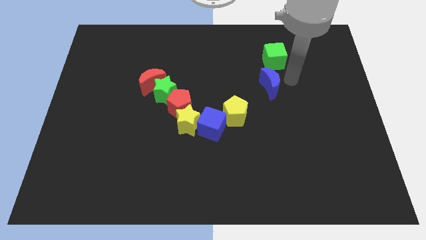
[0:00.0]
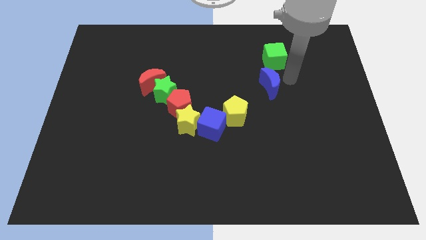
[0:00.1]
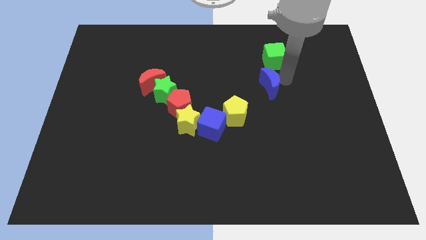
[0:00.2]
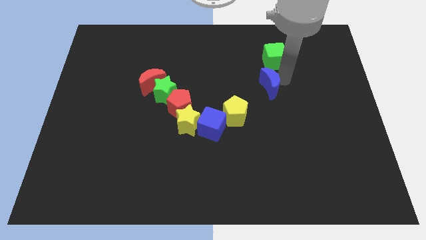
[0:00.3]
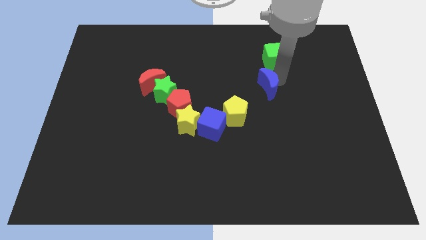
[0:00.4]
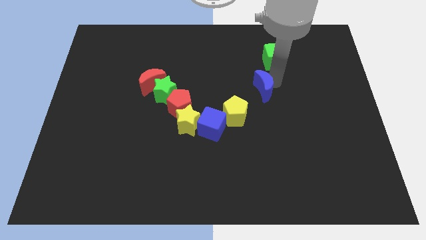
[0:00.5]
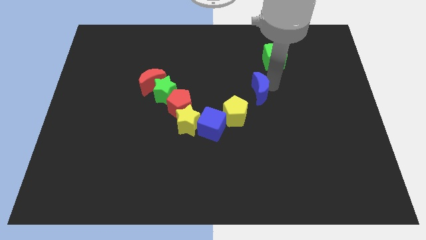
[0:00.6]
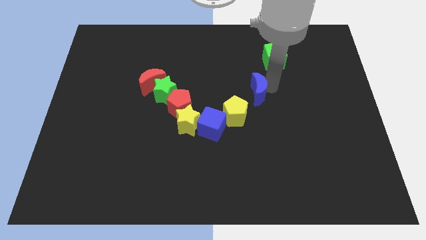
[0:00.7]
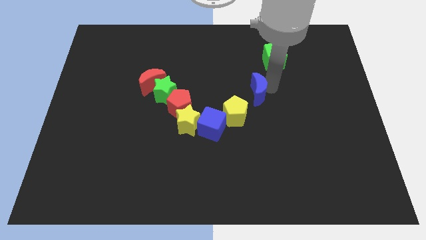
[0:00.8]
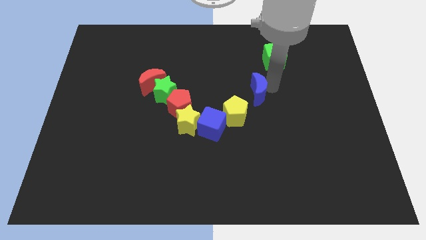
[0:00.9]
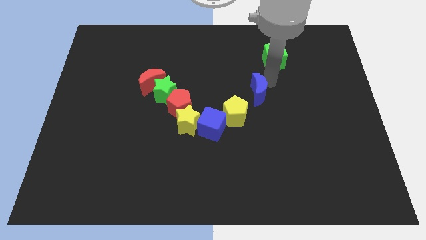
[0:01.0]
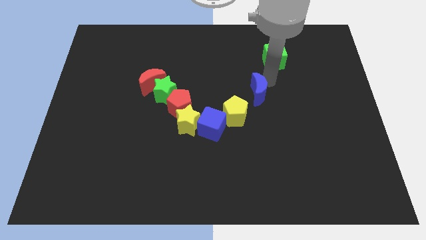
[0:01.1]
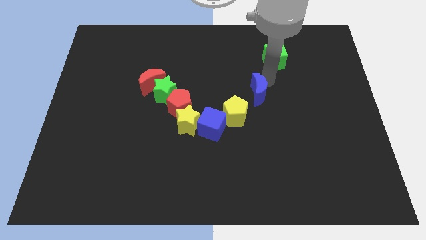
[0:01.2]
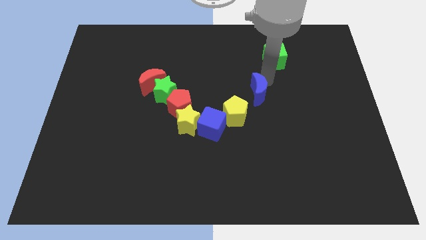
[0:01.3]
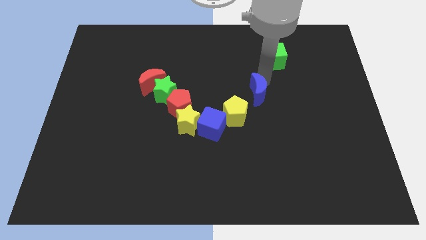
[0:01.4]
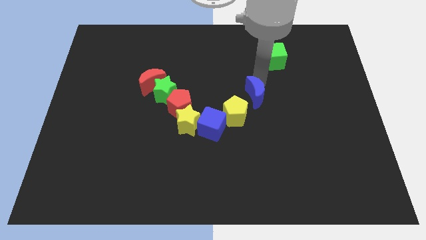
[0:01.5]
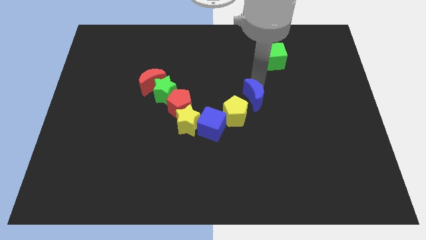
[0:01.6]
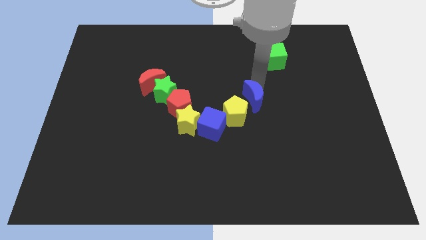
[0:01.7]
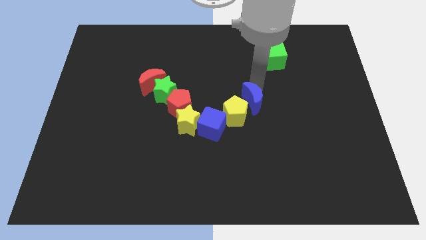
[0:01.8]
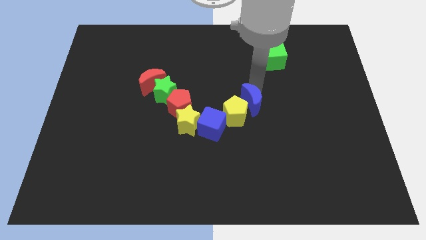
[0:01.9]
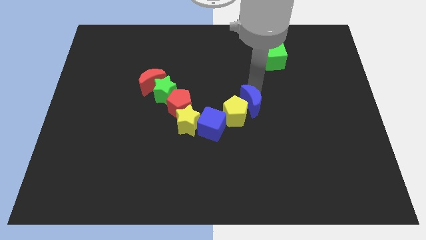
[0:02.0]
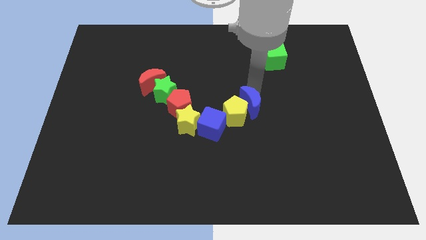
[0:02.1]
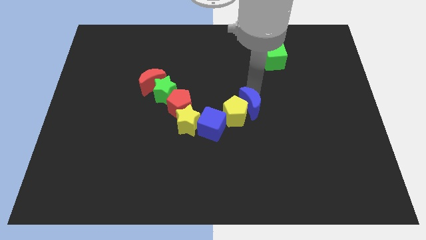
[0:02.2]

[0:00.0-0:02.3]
place the blue crescent right to the yellow pentagon

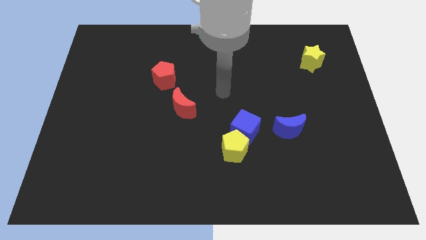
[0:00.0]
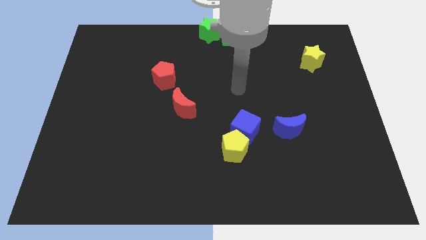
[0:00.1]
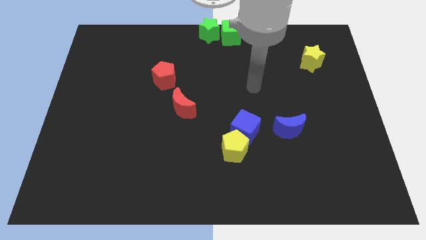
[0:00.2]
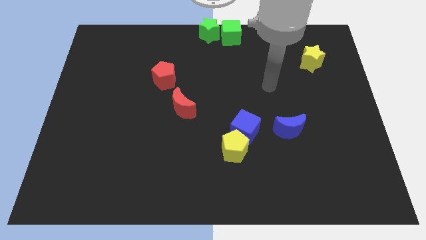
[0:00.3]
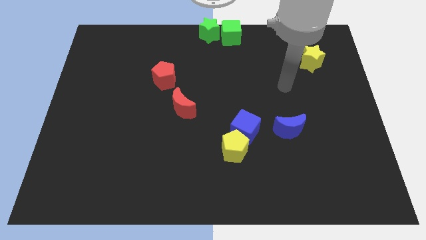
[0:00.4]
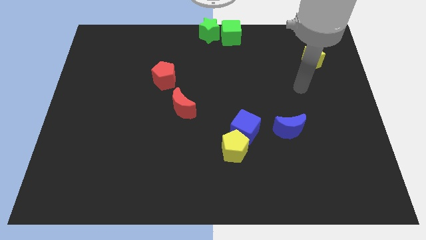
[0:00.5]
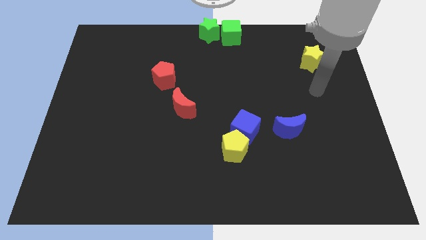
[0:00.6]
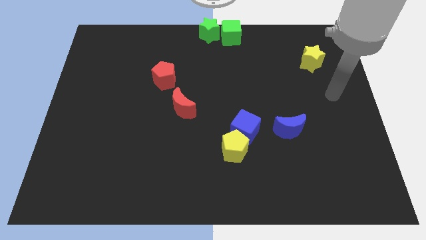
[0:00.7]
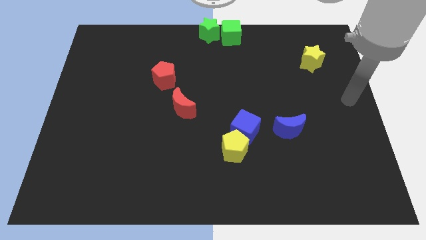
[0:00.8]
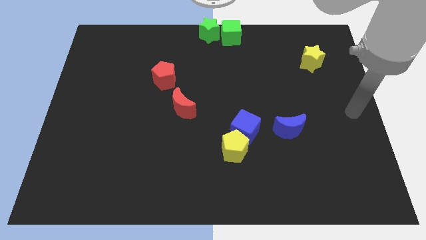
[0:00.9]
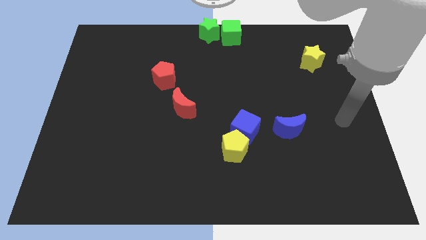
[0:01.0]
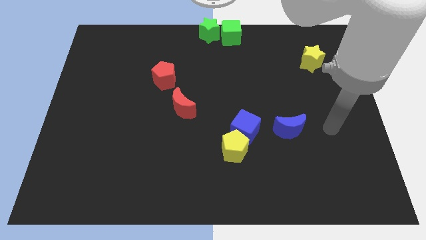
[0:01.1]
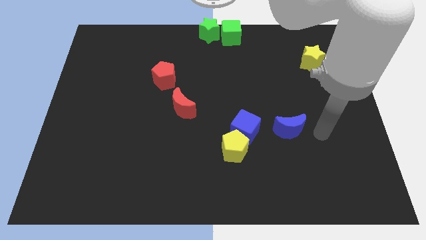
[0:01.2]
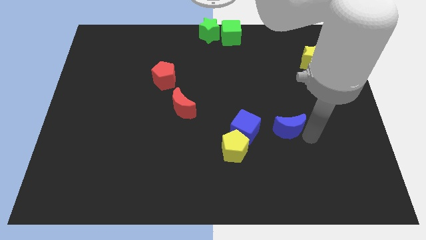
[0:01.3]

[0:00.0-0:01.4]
move your arm towards the blue crescent

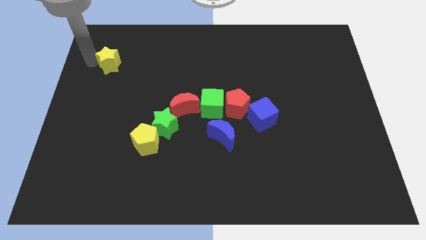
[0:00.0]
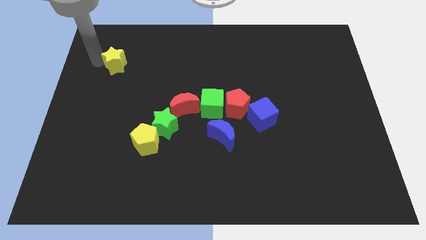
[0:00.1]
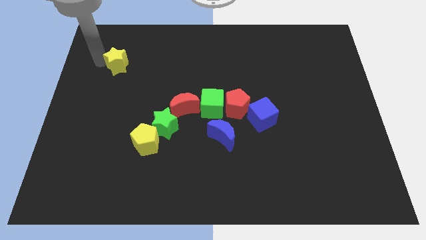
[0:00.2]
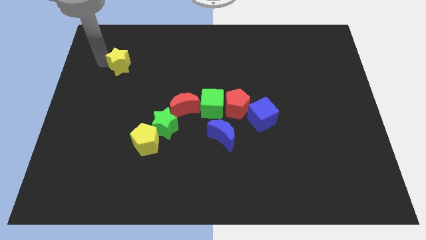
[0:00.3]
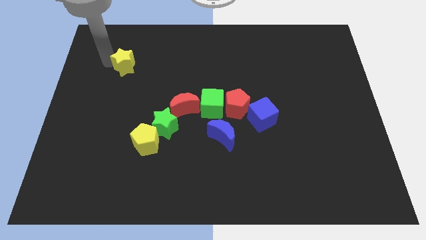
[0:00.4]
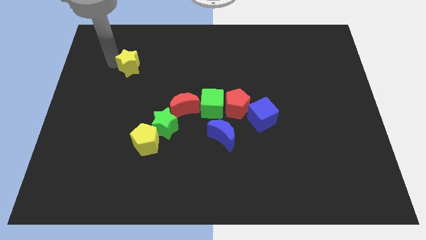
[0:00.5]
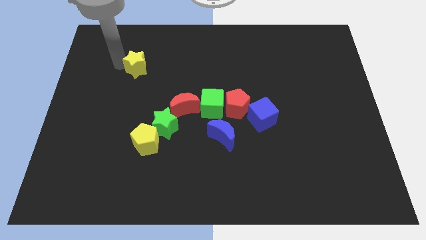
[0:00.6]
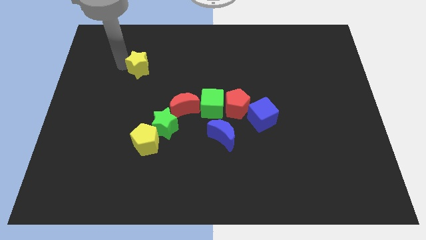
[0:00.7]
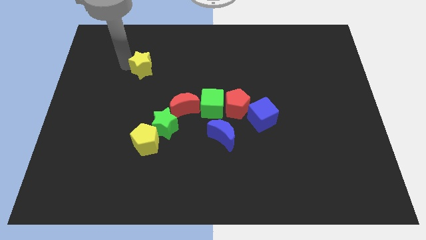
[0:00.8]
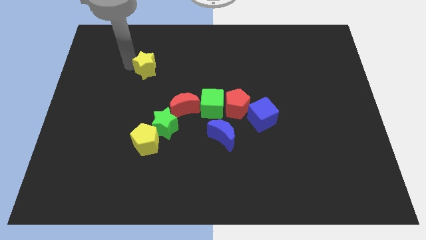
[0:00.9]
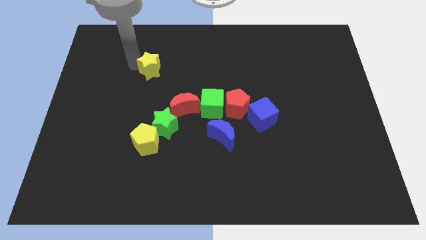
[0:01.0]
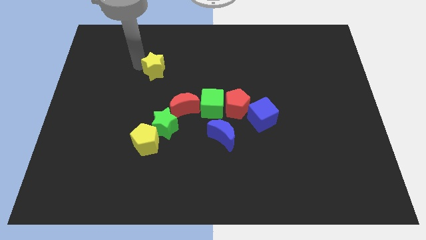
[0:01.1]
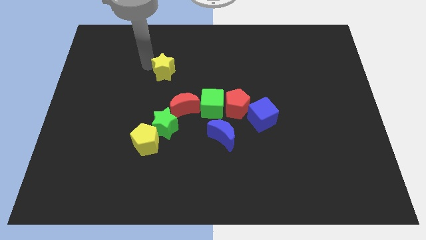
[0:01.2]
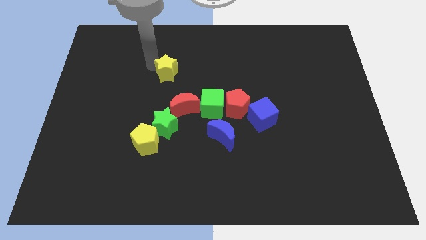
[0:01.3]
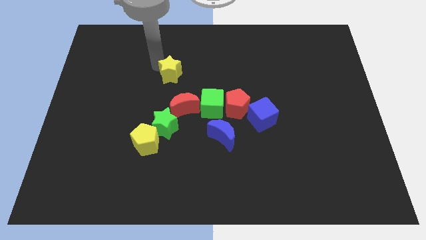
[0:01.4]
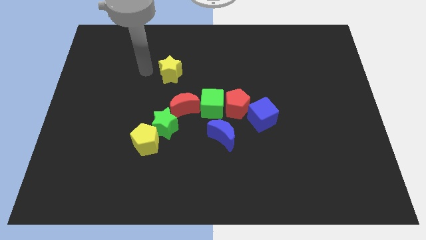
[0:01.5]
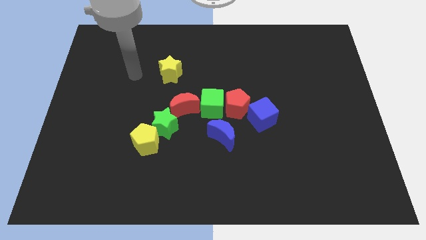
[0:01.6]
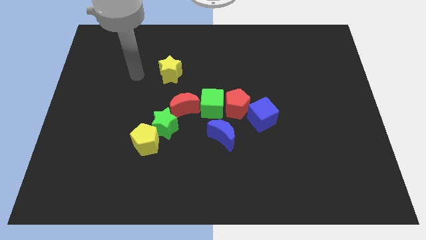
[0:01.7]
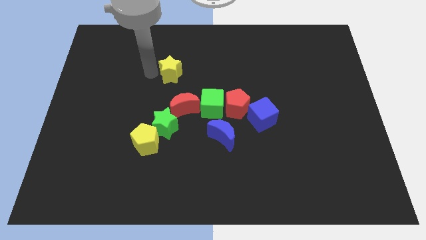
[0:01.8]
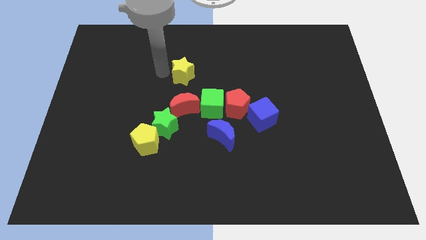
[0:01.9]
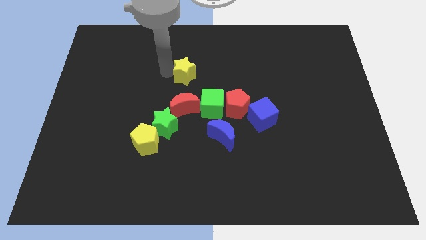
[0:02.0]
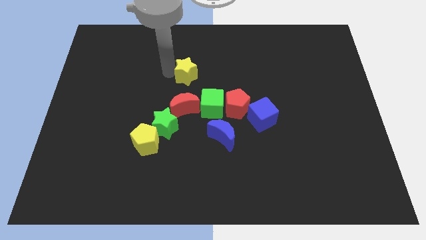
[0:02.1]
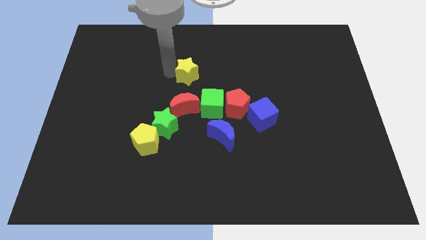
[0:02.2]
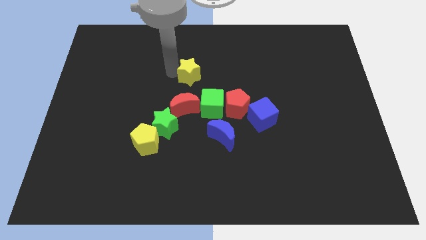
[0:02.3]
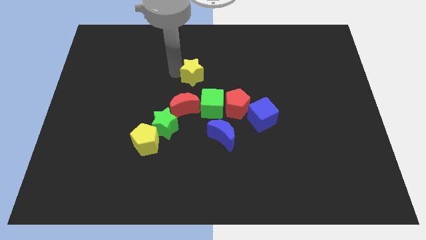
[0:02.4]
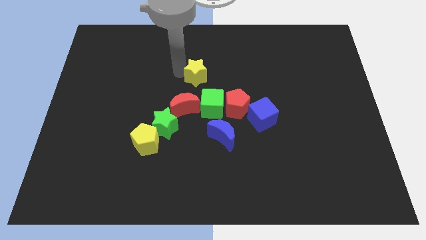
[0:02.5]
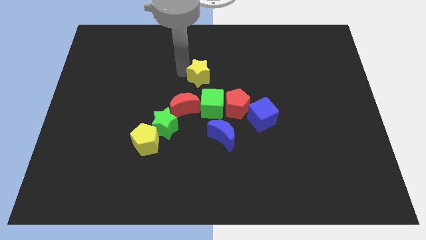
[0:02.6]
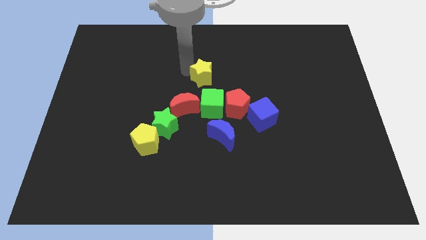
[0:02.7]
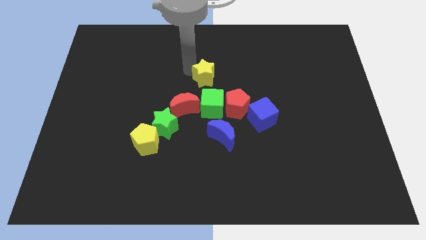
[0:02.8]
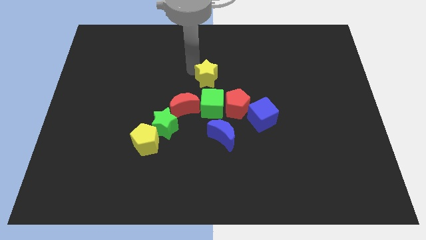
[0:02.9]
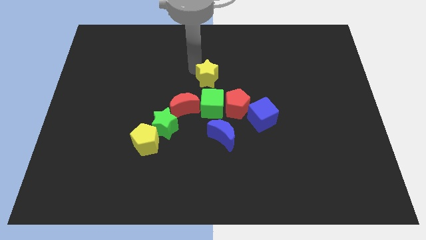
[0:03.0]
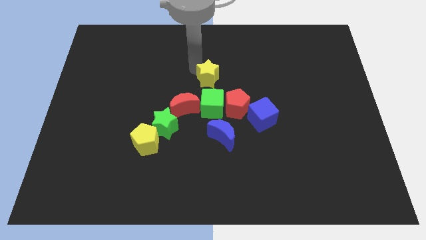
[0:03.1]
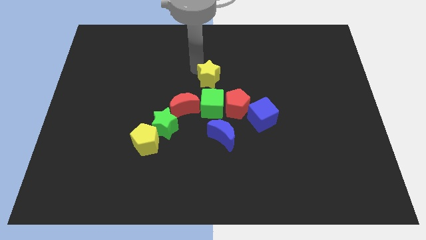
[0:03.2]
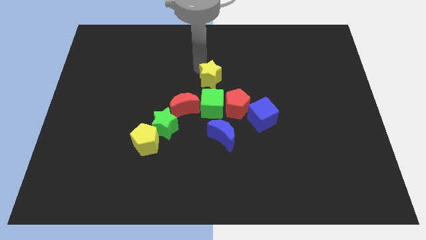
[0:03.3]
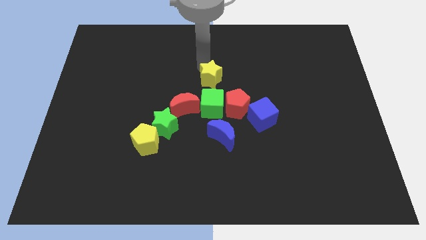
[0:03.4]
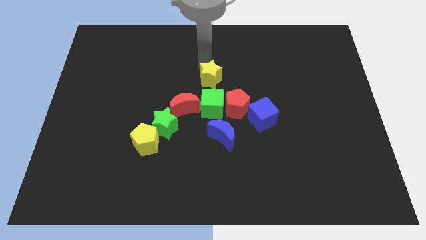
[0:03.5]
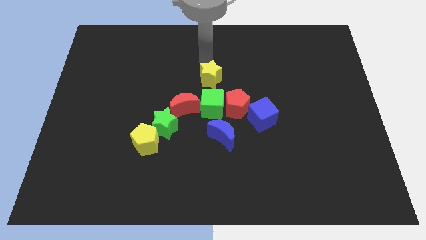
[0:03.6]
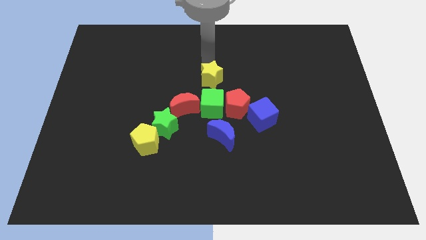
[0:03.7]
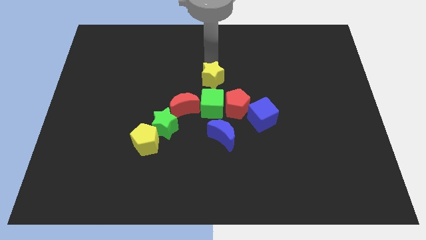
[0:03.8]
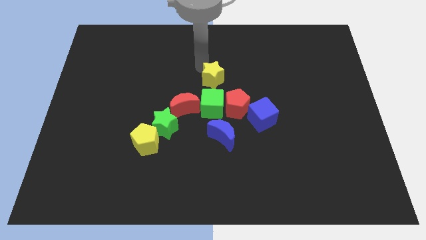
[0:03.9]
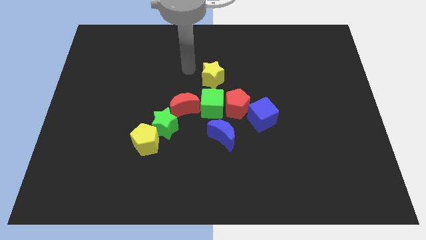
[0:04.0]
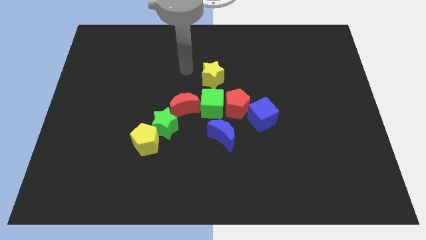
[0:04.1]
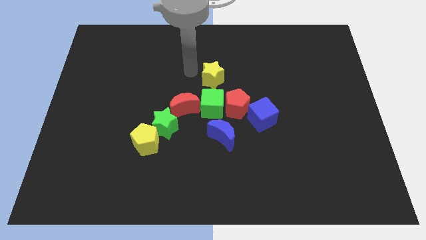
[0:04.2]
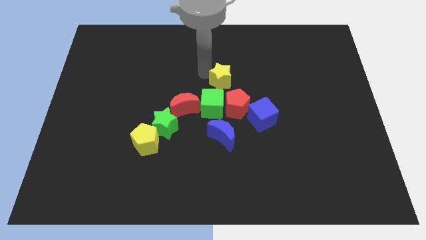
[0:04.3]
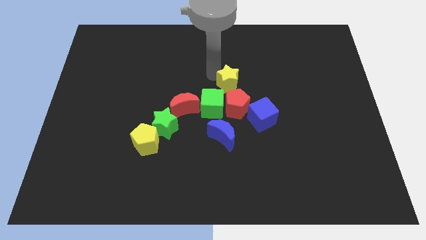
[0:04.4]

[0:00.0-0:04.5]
push the yellow star to the top of the green cube

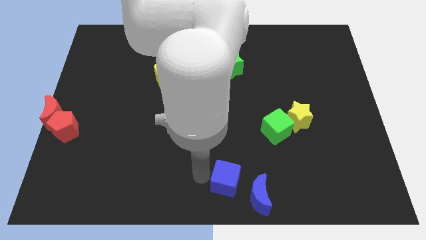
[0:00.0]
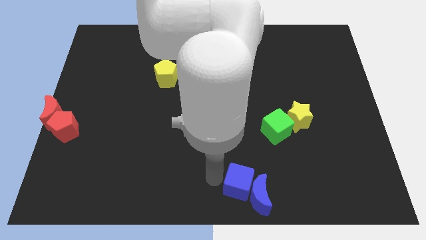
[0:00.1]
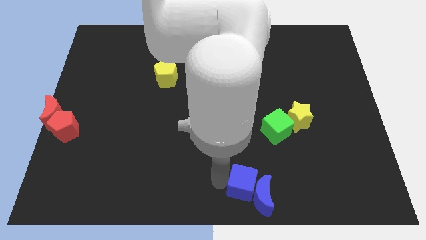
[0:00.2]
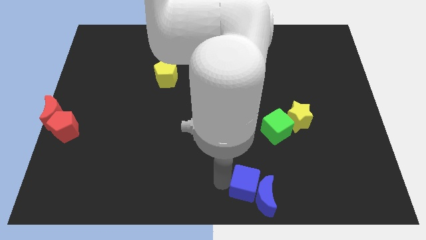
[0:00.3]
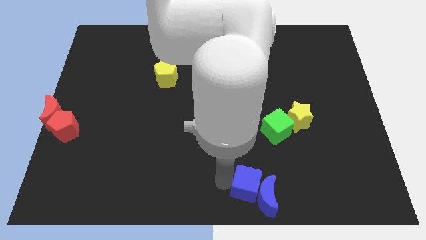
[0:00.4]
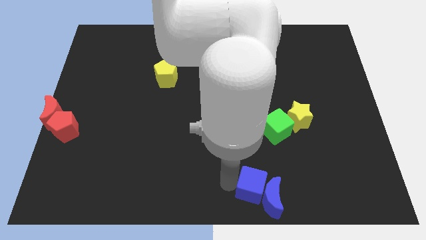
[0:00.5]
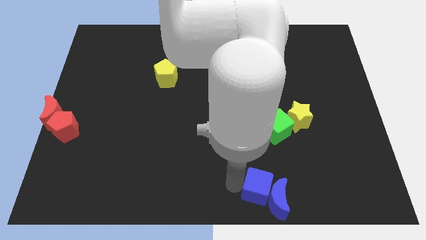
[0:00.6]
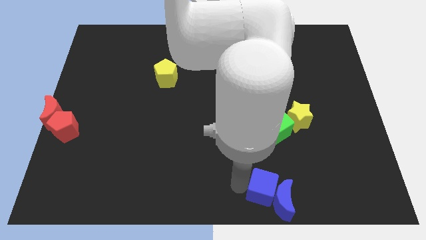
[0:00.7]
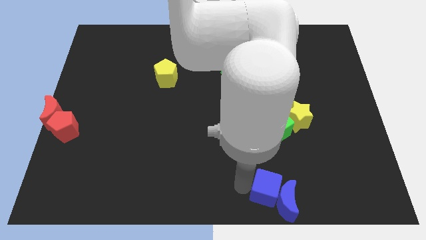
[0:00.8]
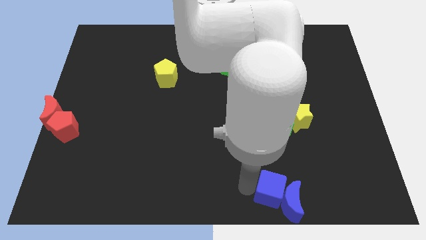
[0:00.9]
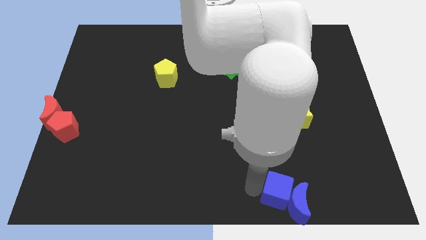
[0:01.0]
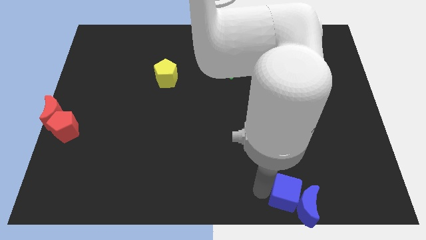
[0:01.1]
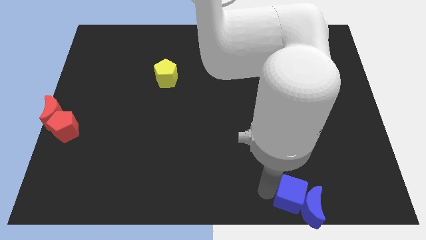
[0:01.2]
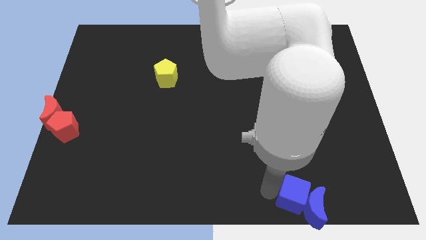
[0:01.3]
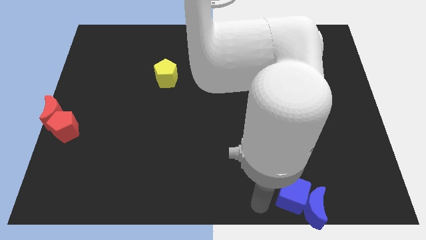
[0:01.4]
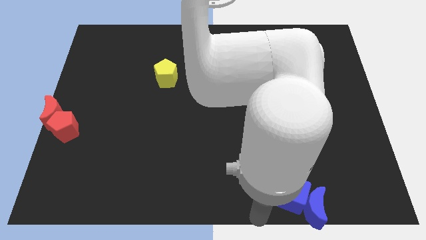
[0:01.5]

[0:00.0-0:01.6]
move the group of the blue blocks towards the bottom right corner
